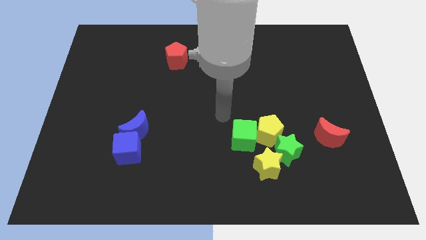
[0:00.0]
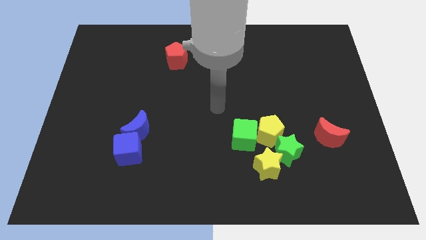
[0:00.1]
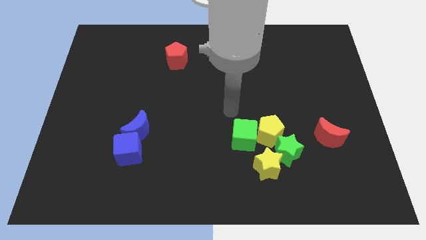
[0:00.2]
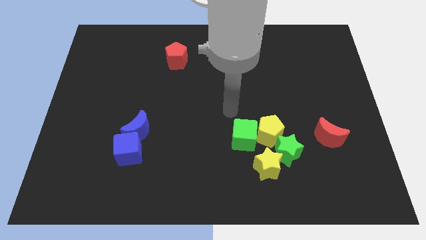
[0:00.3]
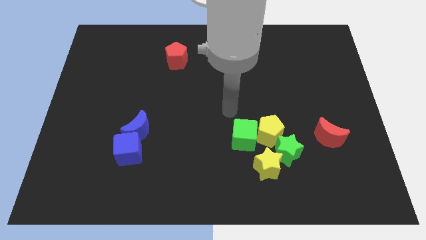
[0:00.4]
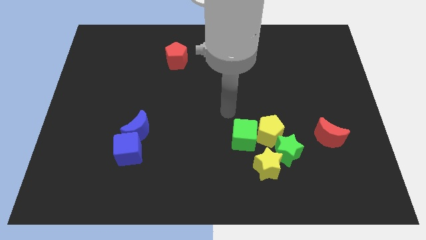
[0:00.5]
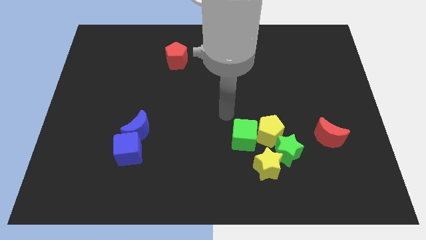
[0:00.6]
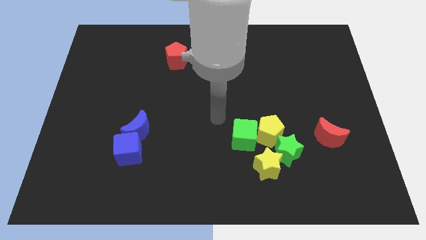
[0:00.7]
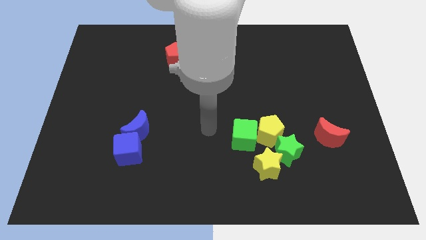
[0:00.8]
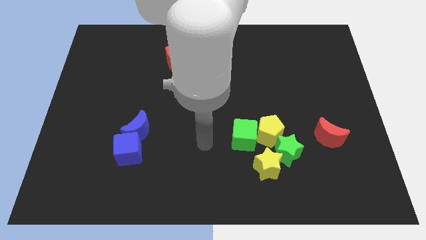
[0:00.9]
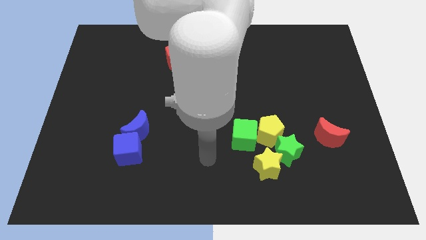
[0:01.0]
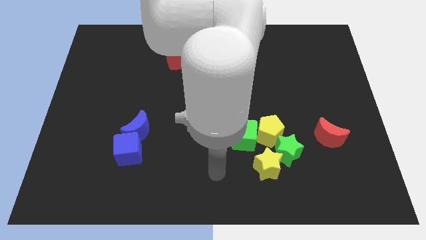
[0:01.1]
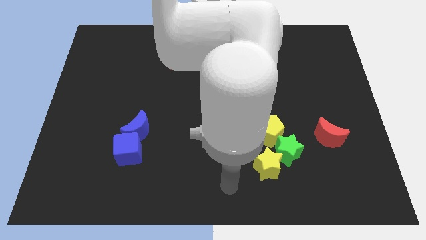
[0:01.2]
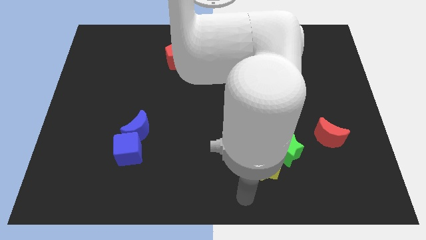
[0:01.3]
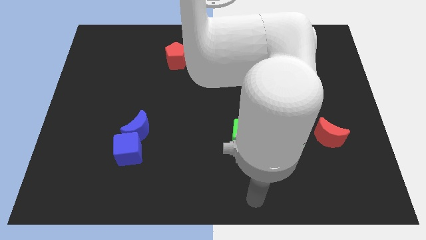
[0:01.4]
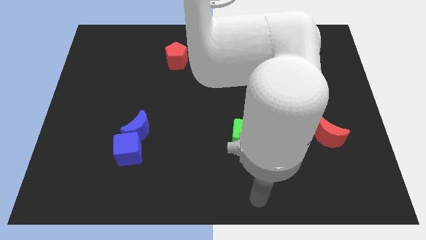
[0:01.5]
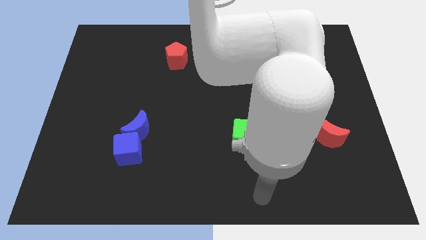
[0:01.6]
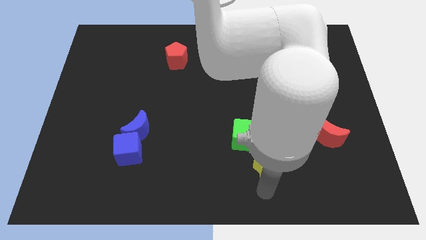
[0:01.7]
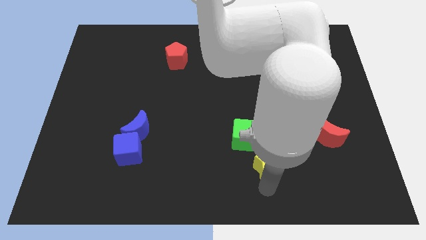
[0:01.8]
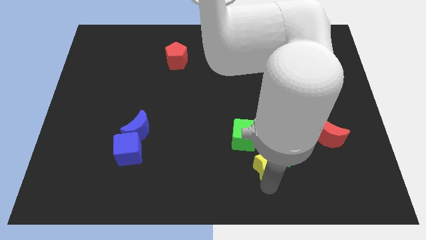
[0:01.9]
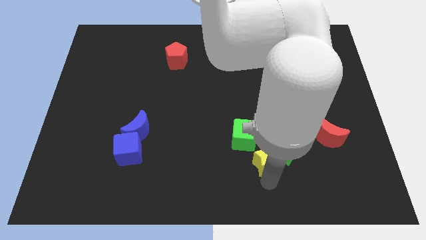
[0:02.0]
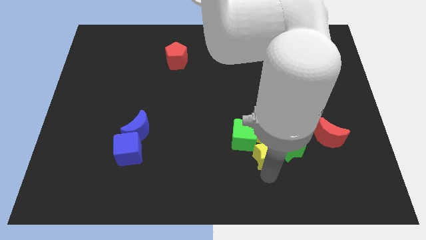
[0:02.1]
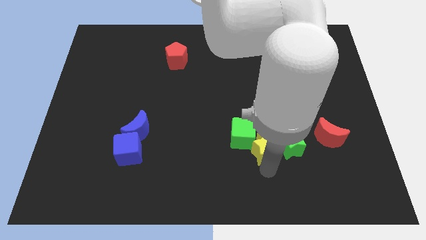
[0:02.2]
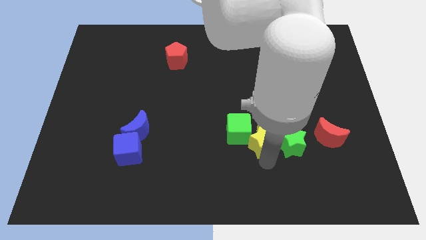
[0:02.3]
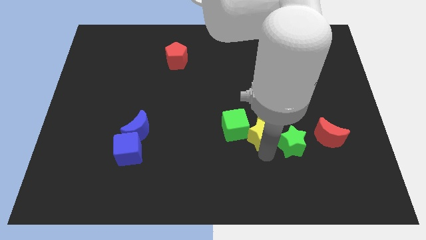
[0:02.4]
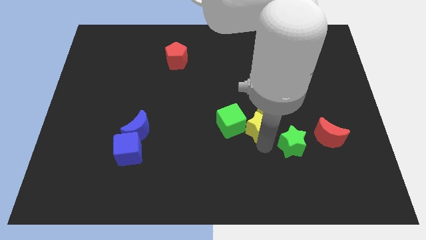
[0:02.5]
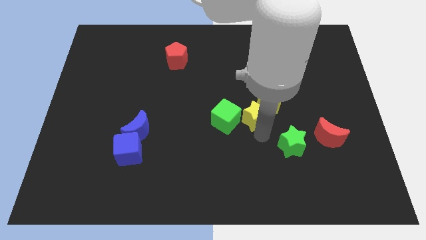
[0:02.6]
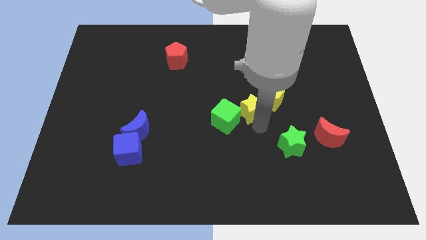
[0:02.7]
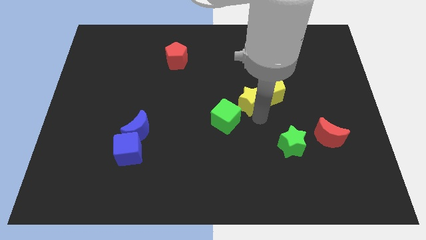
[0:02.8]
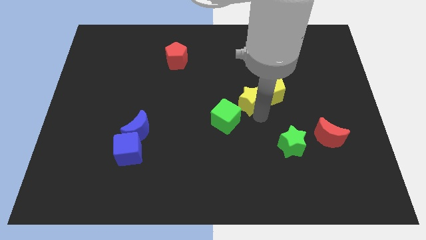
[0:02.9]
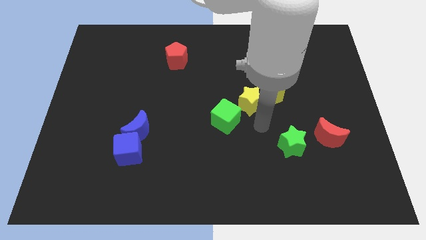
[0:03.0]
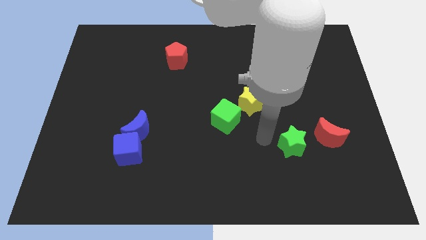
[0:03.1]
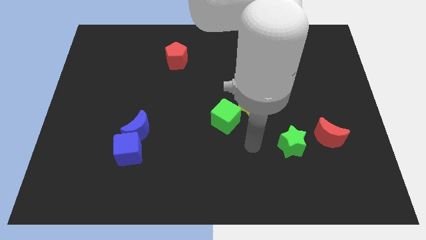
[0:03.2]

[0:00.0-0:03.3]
move the yellow blocks towards the top

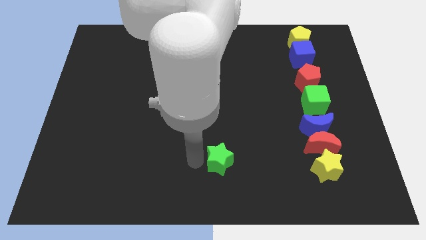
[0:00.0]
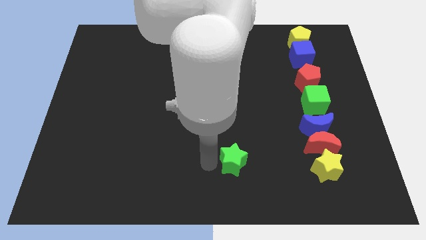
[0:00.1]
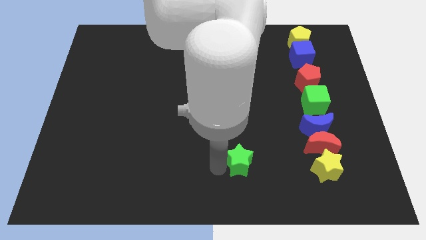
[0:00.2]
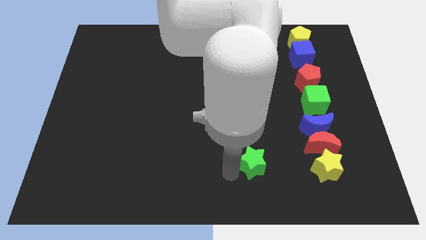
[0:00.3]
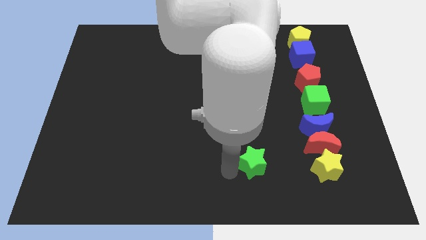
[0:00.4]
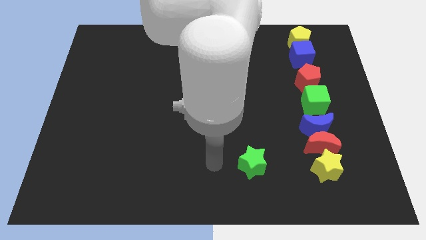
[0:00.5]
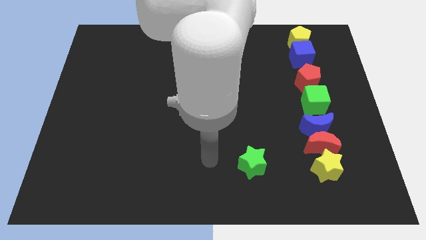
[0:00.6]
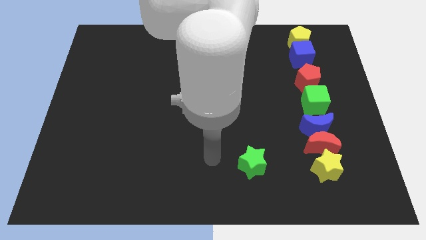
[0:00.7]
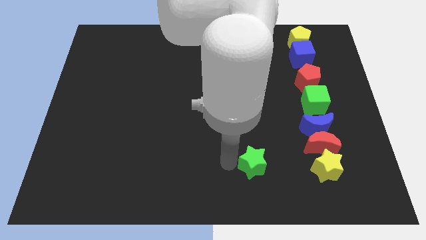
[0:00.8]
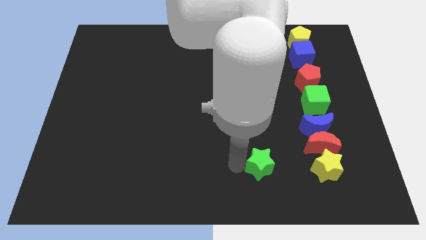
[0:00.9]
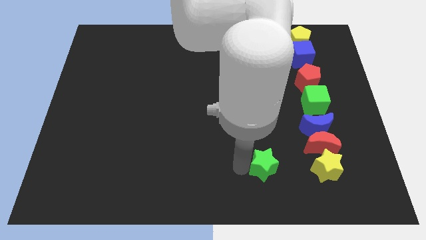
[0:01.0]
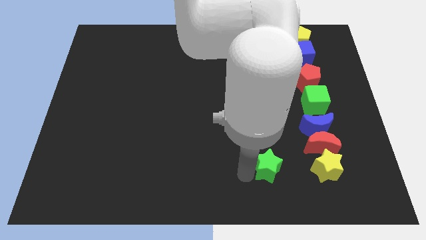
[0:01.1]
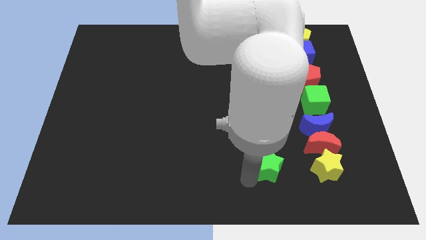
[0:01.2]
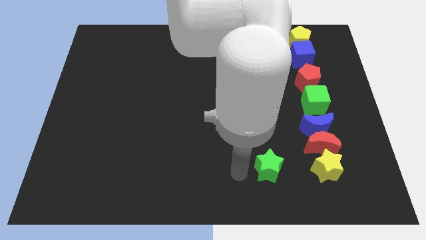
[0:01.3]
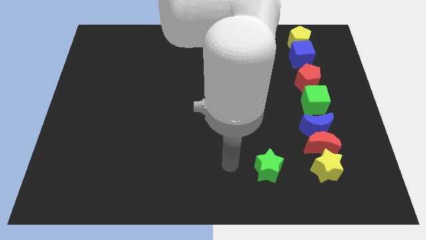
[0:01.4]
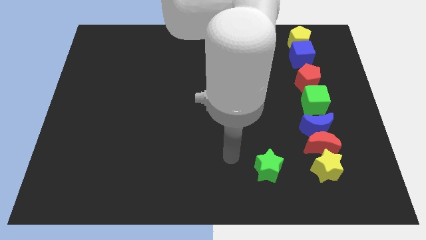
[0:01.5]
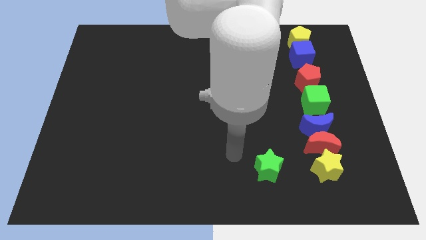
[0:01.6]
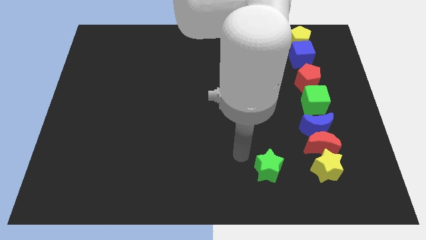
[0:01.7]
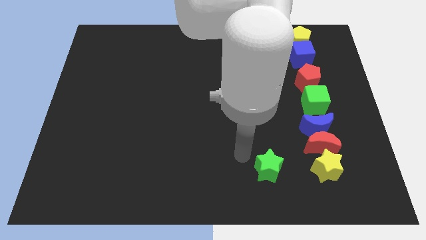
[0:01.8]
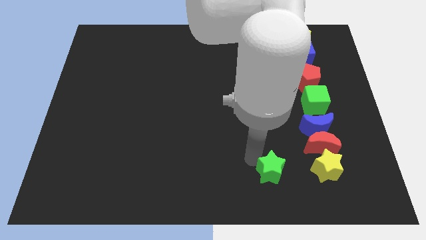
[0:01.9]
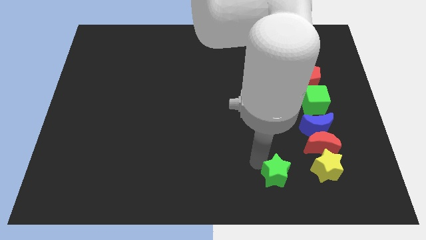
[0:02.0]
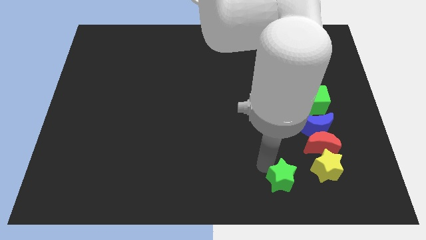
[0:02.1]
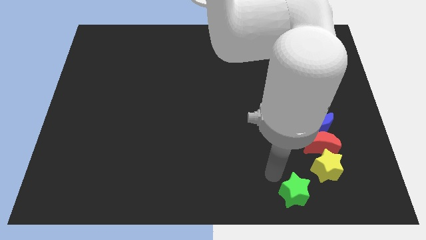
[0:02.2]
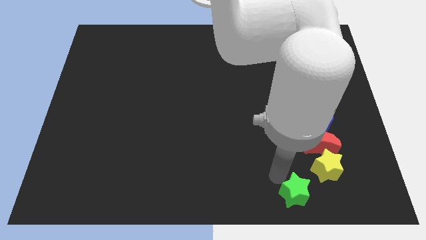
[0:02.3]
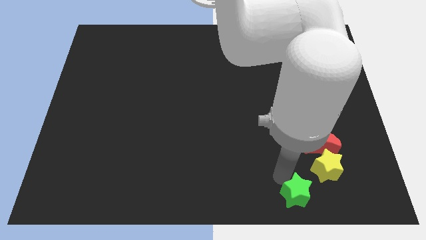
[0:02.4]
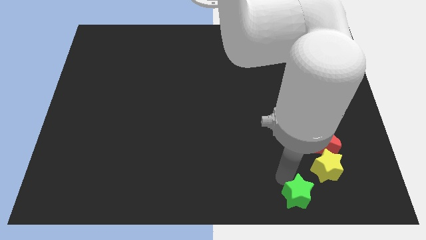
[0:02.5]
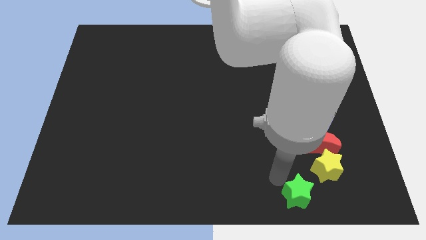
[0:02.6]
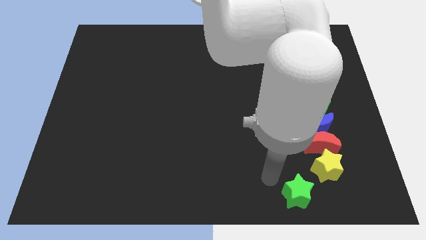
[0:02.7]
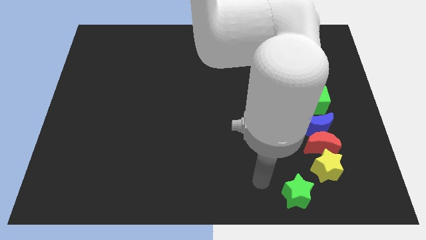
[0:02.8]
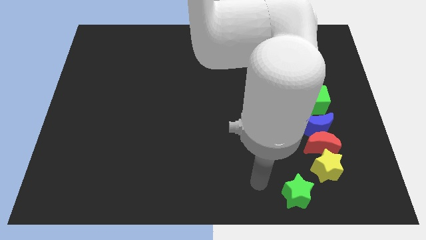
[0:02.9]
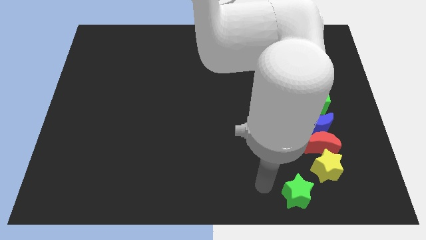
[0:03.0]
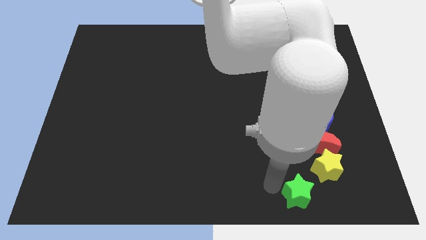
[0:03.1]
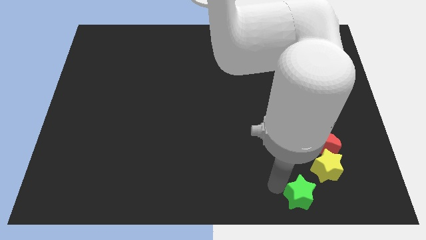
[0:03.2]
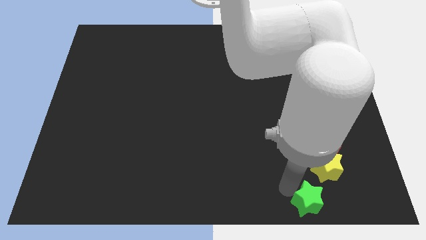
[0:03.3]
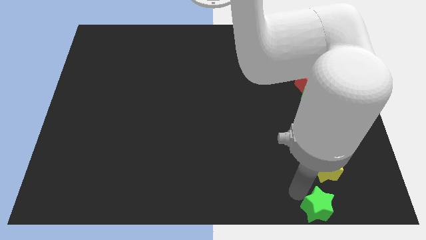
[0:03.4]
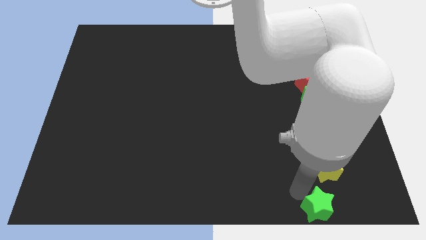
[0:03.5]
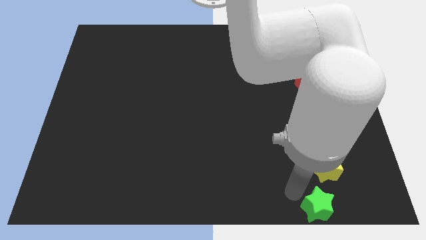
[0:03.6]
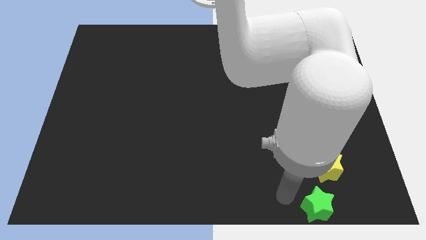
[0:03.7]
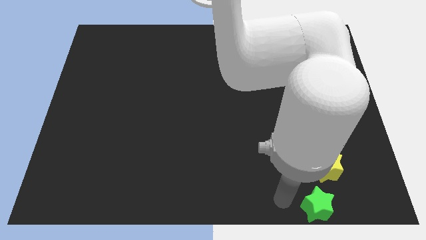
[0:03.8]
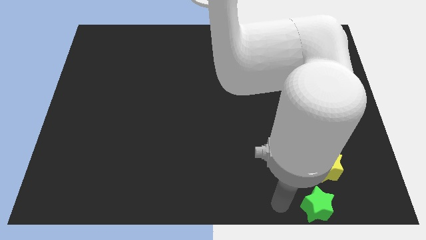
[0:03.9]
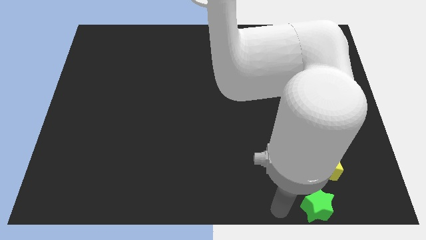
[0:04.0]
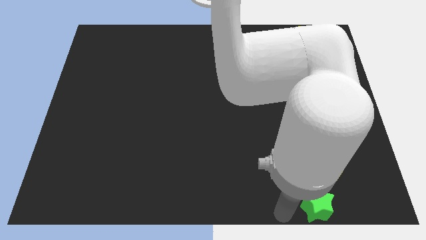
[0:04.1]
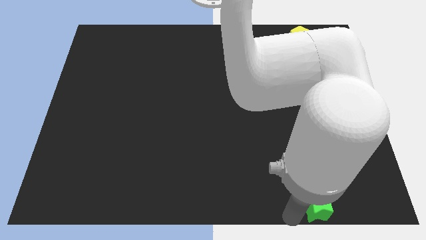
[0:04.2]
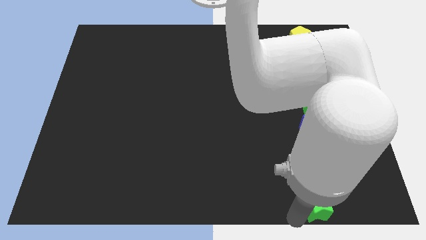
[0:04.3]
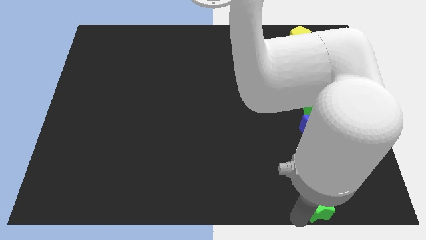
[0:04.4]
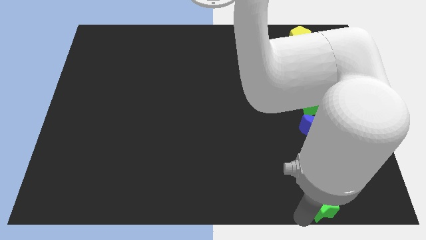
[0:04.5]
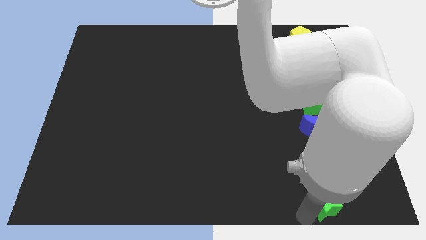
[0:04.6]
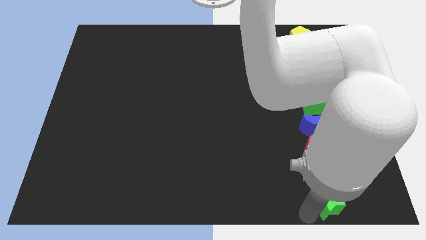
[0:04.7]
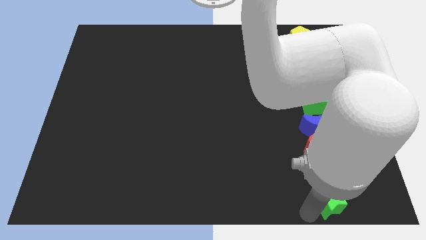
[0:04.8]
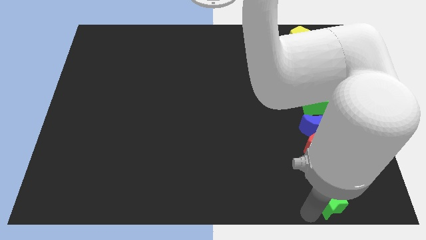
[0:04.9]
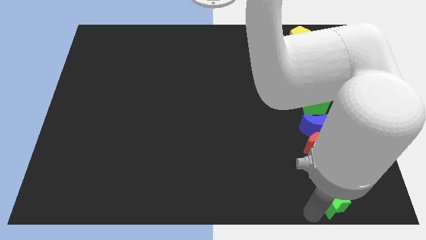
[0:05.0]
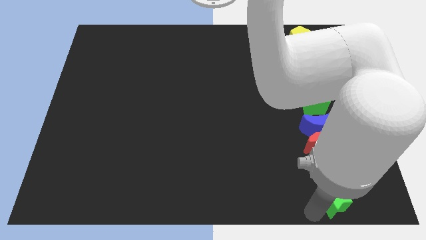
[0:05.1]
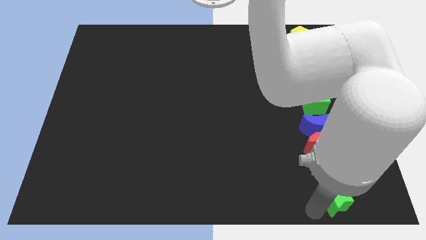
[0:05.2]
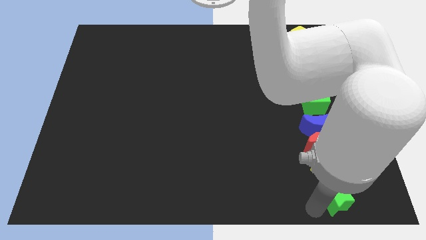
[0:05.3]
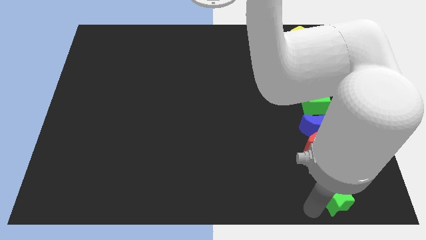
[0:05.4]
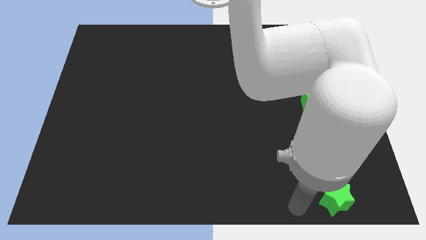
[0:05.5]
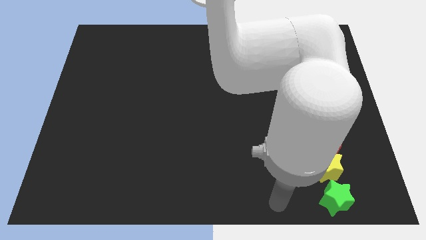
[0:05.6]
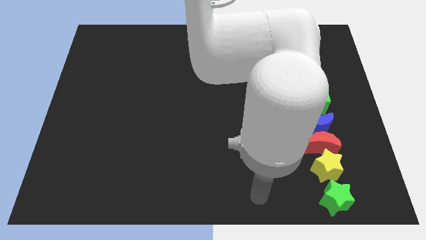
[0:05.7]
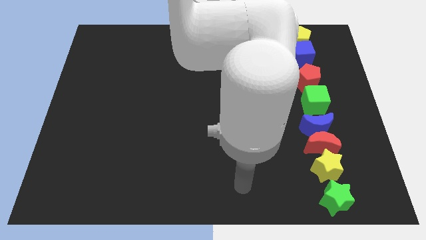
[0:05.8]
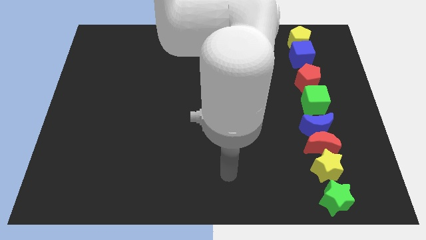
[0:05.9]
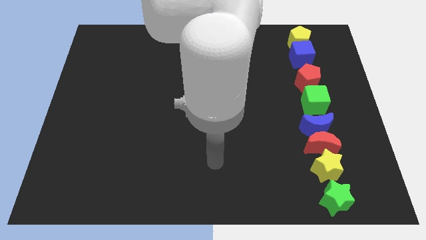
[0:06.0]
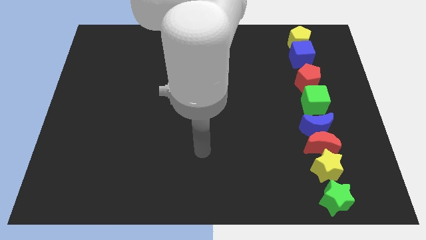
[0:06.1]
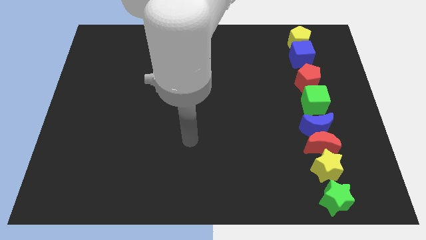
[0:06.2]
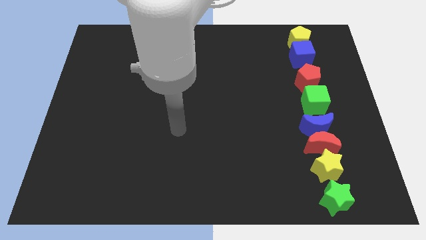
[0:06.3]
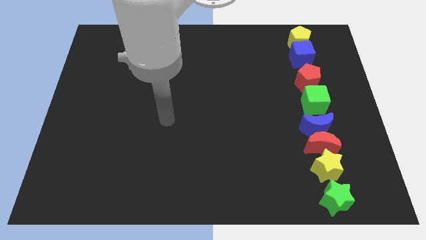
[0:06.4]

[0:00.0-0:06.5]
drag green star below yellow star
